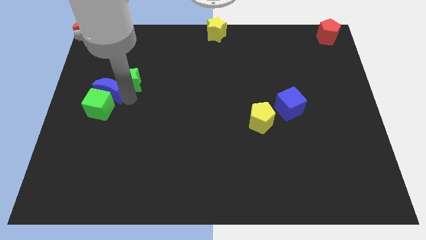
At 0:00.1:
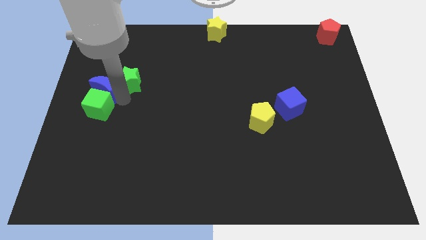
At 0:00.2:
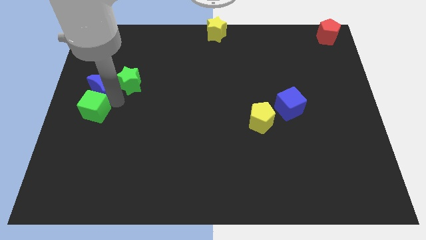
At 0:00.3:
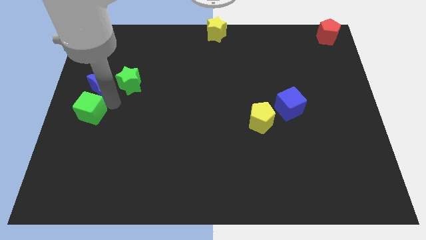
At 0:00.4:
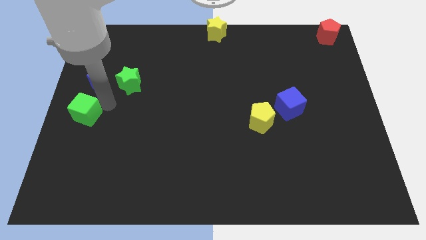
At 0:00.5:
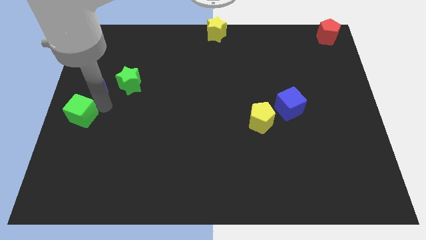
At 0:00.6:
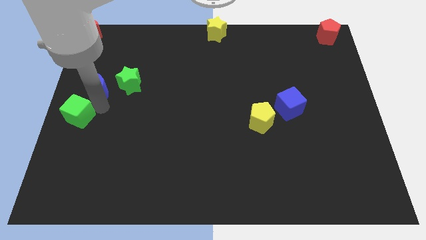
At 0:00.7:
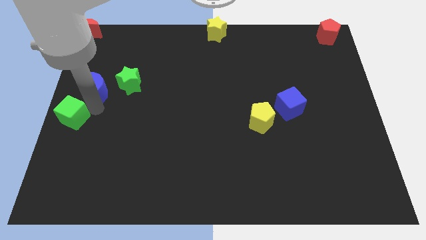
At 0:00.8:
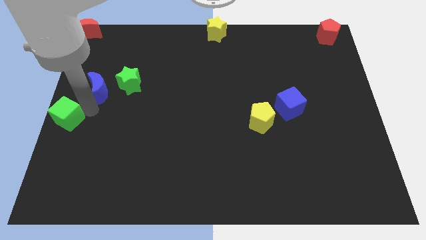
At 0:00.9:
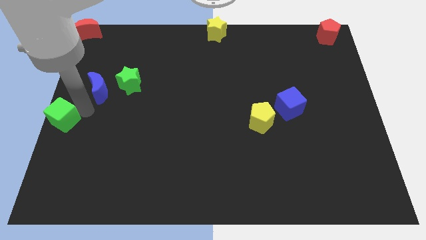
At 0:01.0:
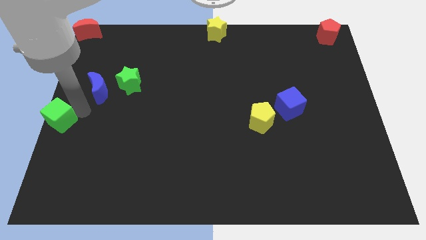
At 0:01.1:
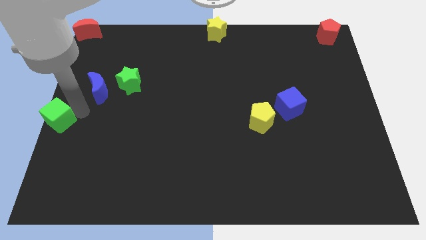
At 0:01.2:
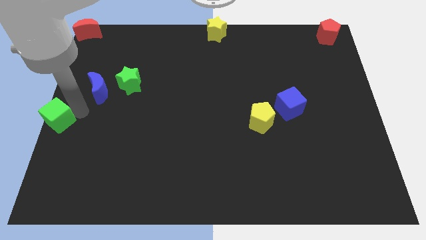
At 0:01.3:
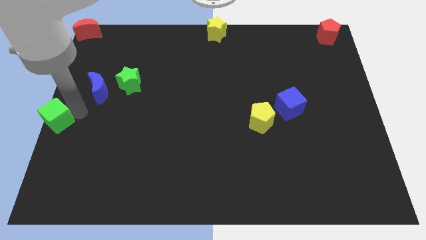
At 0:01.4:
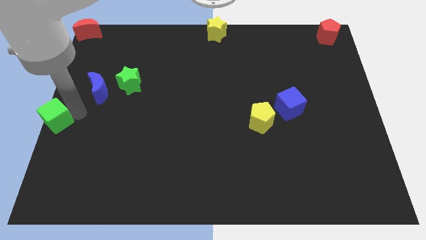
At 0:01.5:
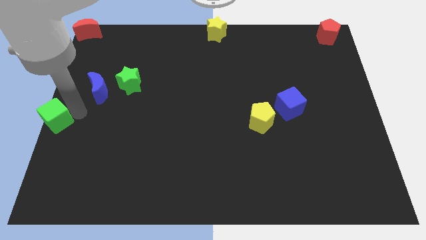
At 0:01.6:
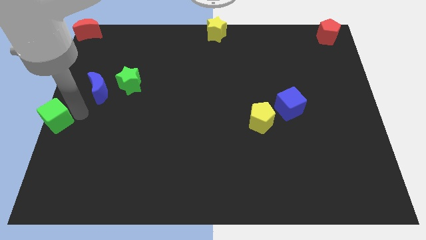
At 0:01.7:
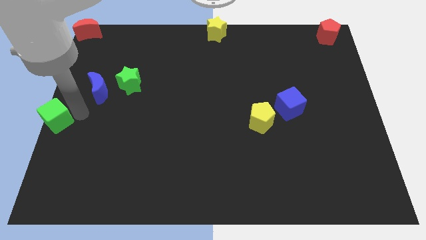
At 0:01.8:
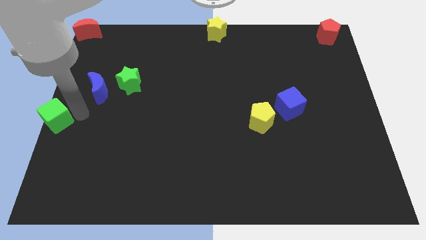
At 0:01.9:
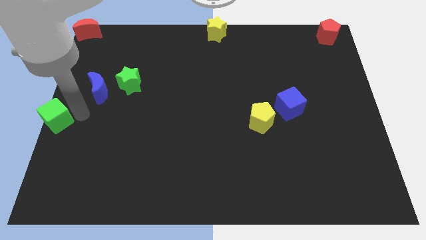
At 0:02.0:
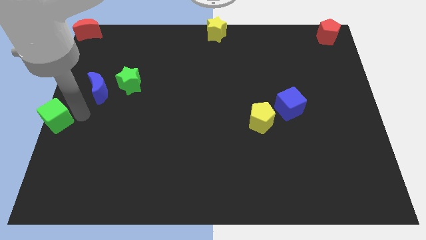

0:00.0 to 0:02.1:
separate green cube from the blue moon

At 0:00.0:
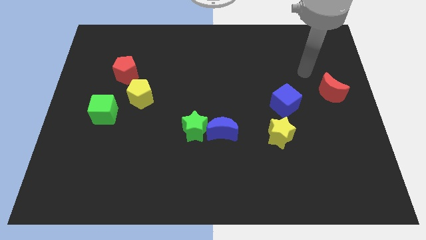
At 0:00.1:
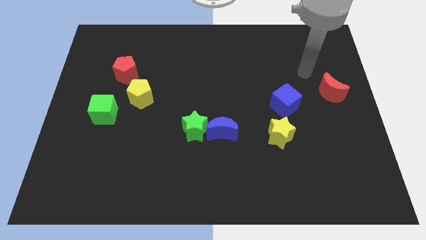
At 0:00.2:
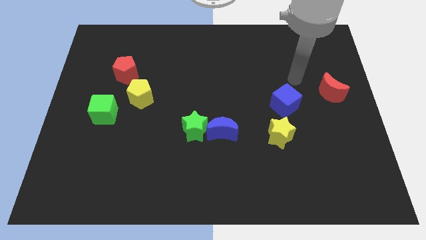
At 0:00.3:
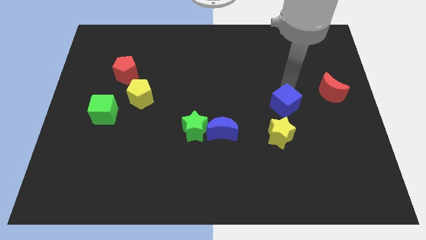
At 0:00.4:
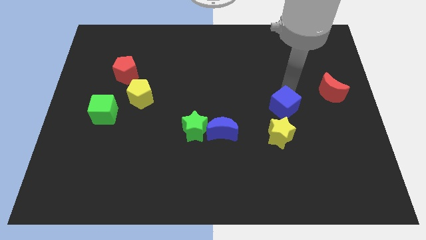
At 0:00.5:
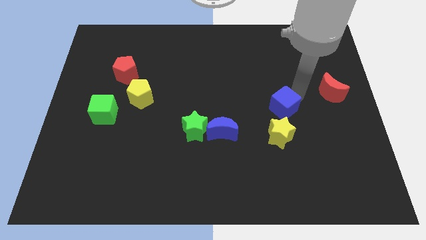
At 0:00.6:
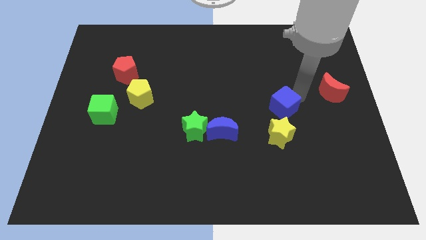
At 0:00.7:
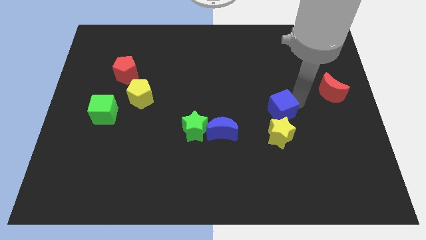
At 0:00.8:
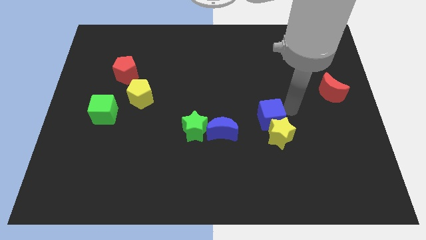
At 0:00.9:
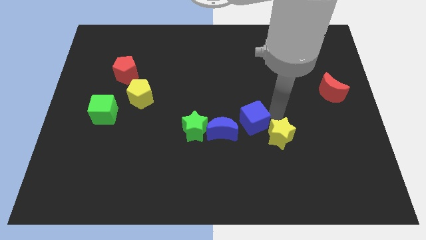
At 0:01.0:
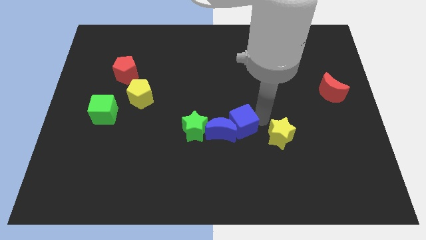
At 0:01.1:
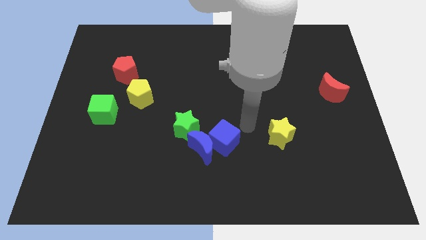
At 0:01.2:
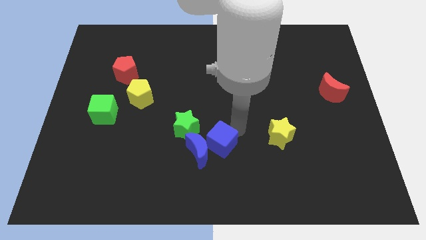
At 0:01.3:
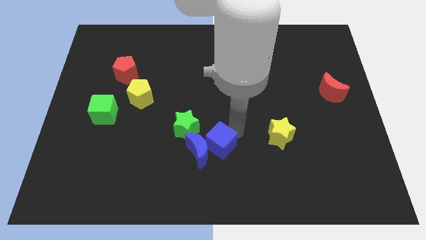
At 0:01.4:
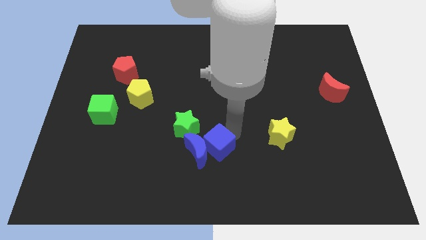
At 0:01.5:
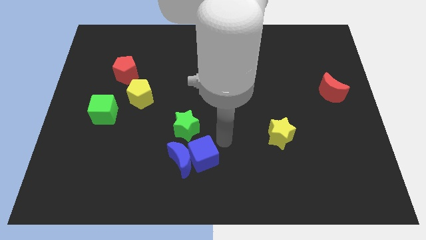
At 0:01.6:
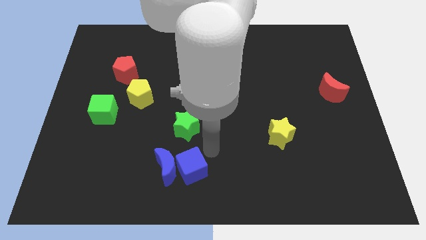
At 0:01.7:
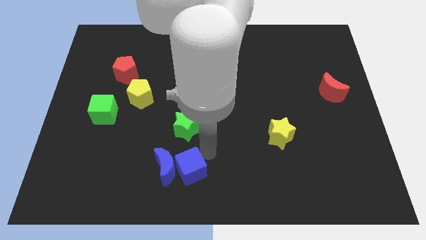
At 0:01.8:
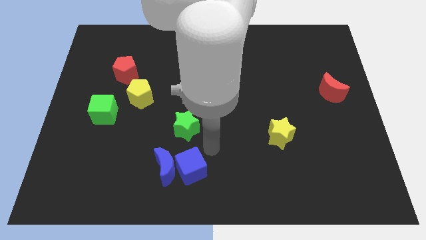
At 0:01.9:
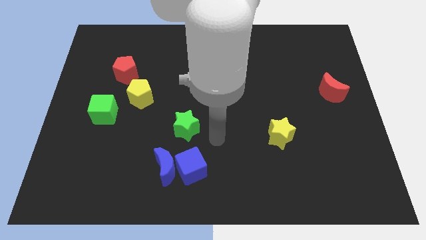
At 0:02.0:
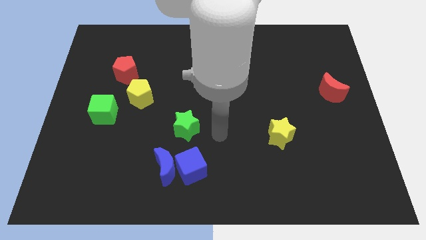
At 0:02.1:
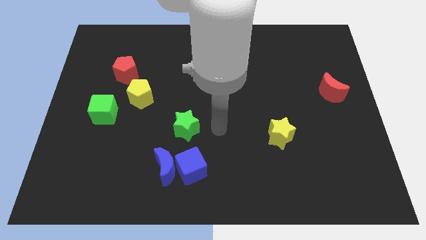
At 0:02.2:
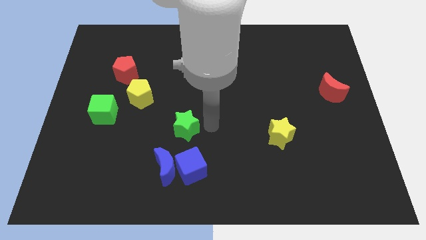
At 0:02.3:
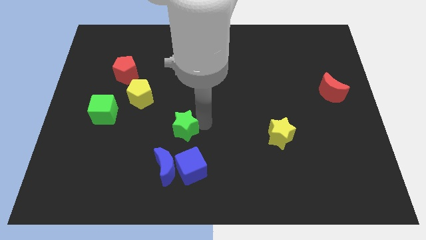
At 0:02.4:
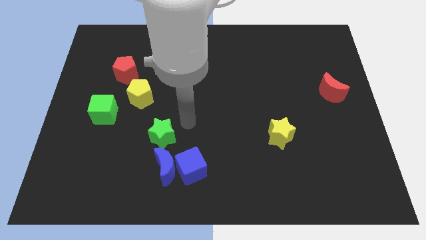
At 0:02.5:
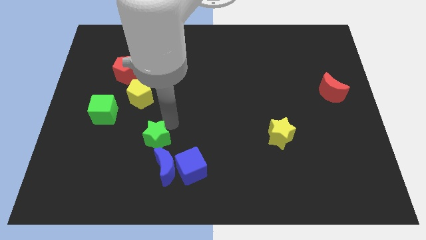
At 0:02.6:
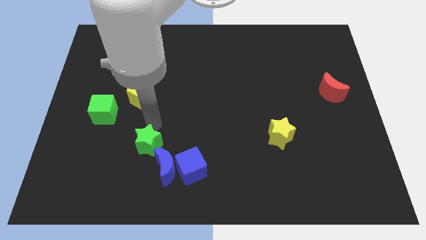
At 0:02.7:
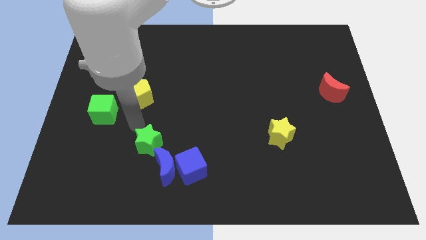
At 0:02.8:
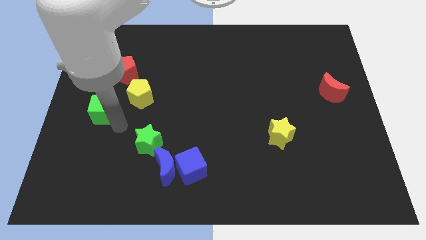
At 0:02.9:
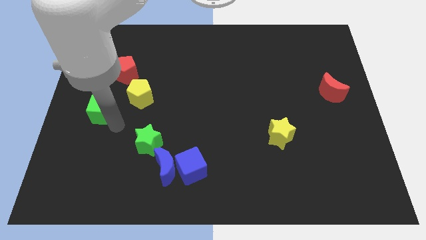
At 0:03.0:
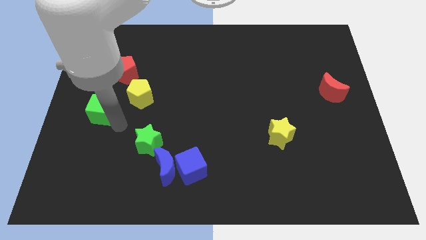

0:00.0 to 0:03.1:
push both the blue blocks and green star slightly to the bottom left side of the board

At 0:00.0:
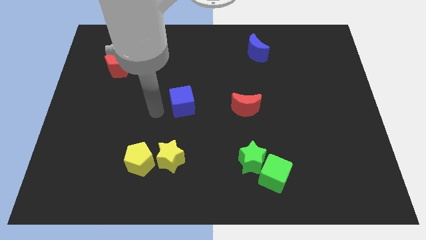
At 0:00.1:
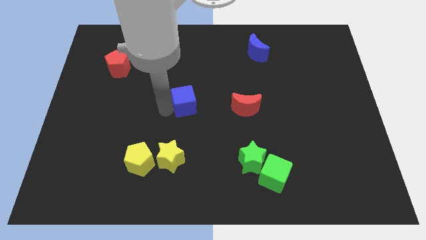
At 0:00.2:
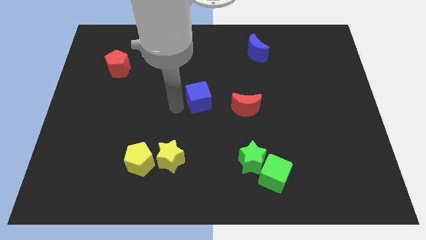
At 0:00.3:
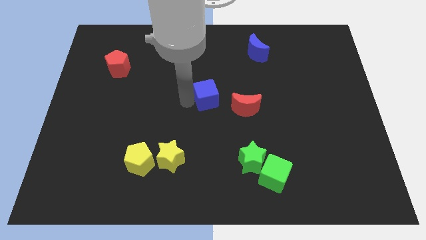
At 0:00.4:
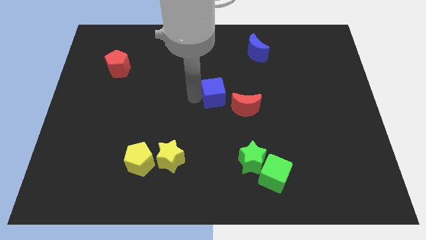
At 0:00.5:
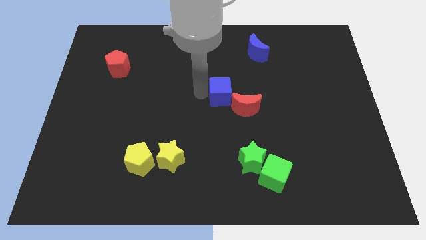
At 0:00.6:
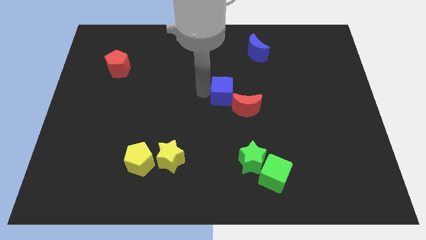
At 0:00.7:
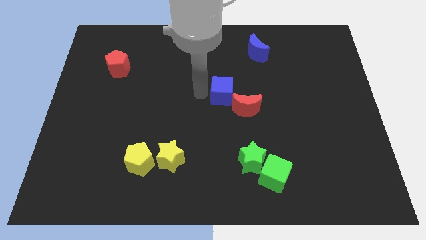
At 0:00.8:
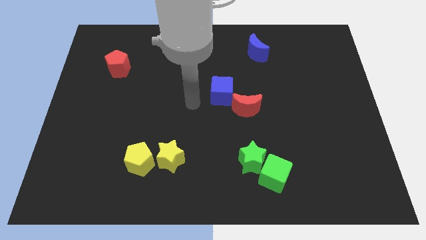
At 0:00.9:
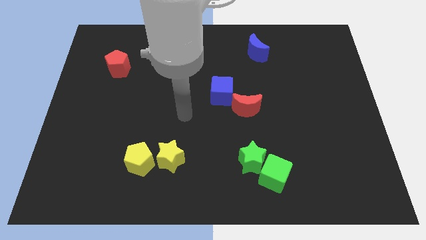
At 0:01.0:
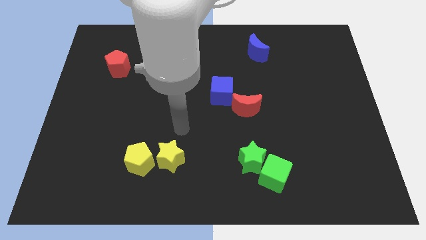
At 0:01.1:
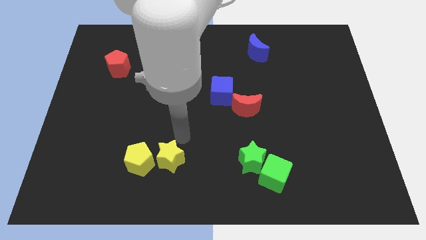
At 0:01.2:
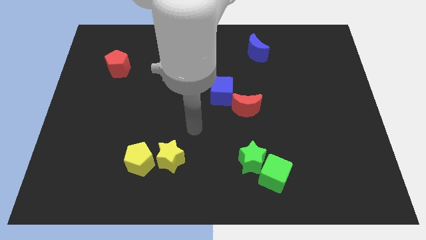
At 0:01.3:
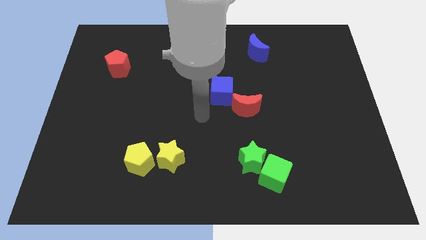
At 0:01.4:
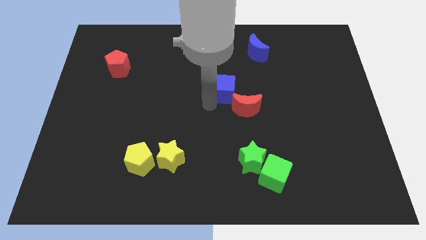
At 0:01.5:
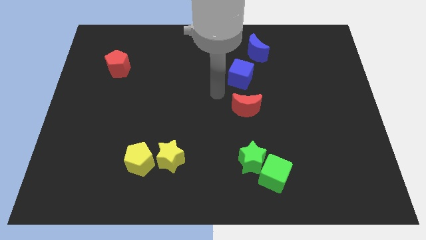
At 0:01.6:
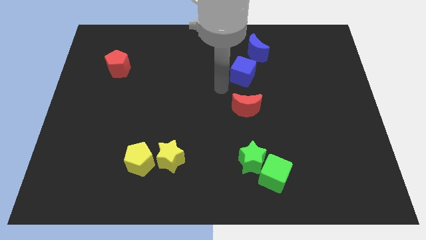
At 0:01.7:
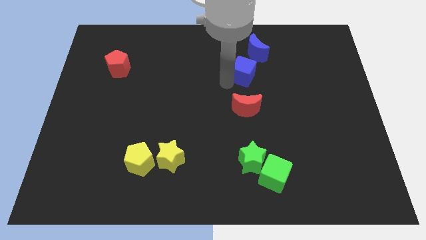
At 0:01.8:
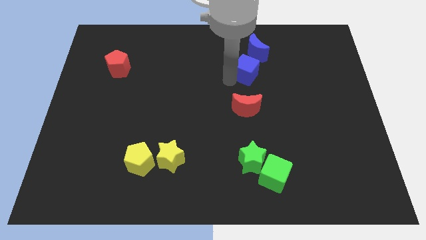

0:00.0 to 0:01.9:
place the blue cube to the bottom of the blue crescent

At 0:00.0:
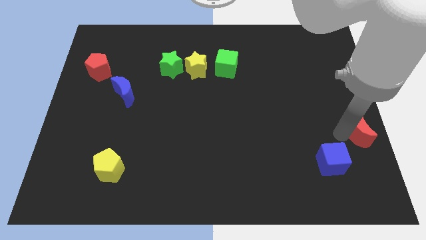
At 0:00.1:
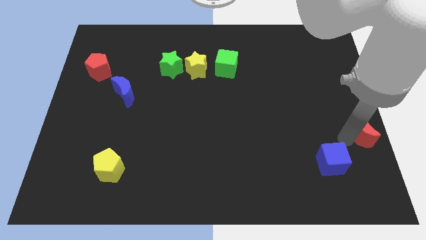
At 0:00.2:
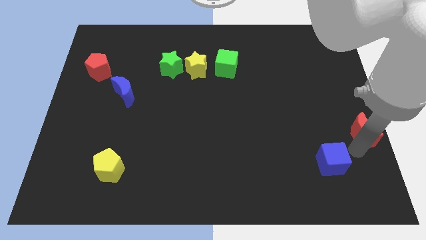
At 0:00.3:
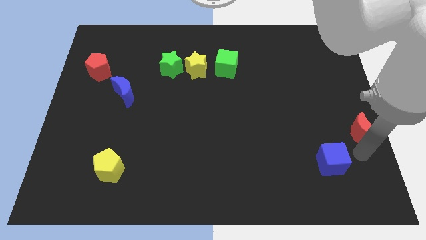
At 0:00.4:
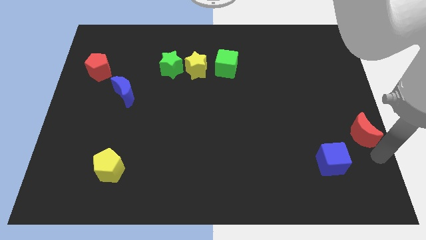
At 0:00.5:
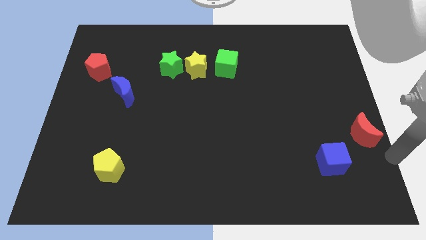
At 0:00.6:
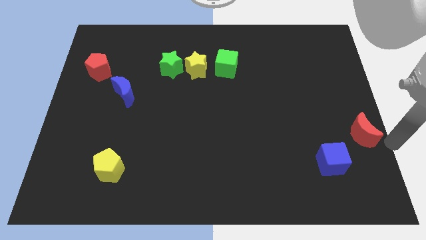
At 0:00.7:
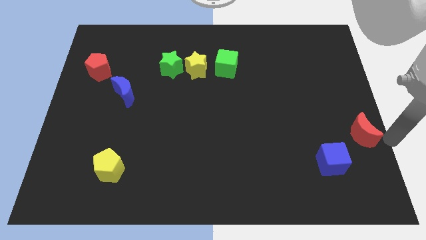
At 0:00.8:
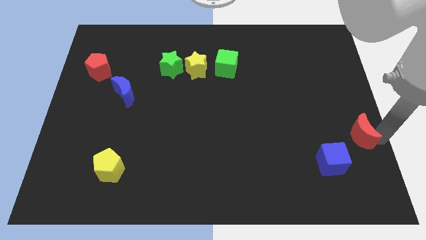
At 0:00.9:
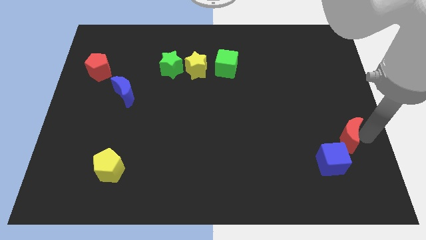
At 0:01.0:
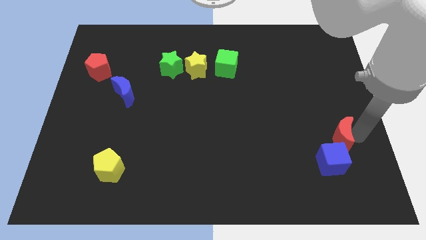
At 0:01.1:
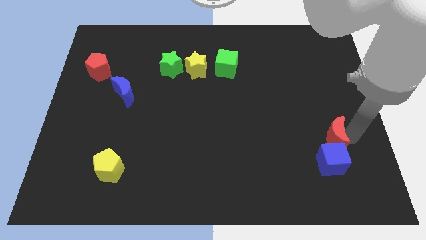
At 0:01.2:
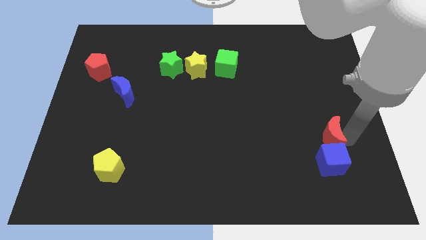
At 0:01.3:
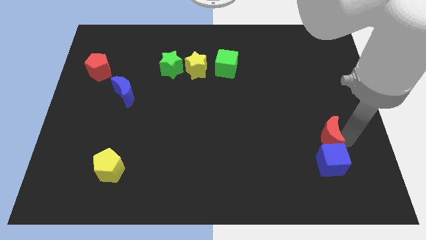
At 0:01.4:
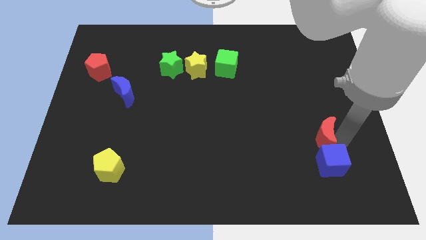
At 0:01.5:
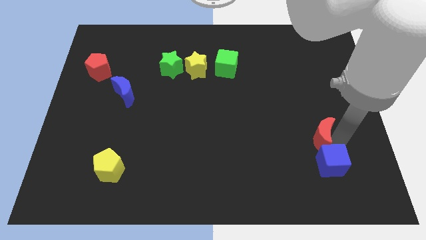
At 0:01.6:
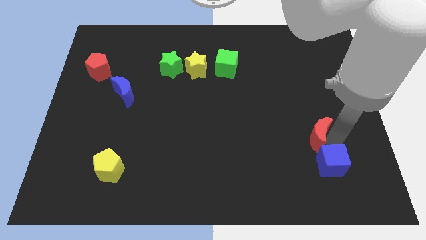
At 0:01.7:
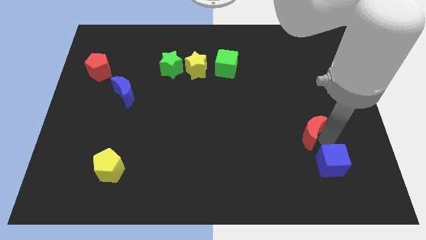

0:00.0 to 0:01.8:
move the red moon above the blue cube
